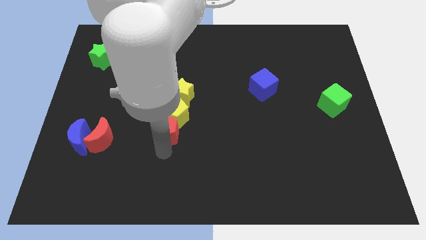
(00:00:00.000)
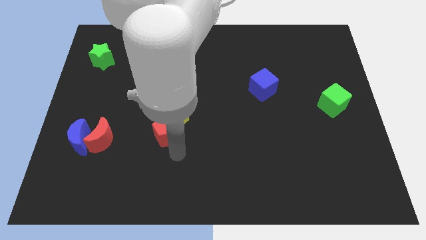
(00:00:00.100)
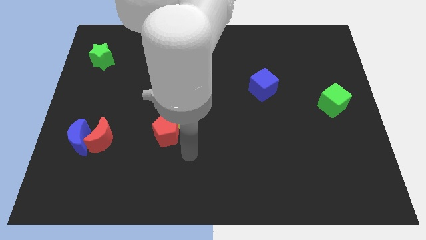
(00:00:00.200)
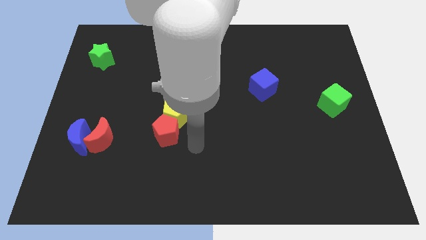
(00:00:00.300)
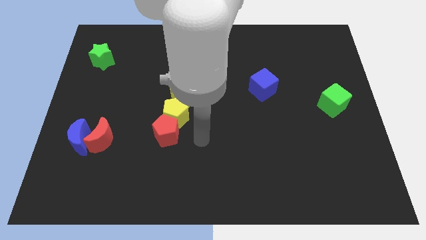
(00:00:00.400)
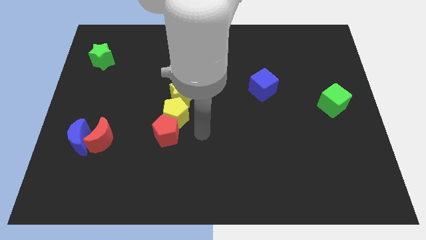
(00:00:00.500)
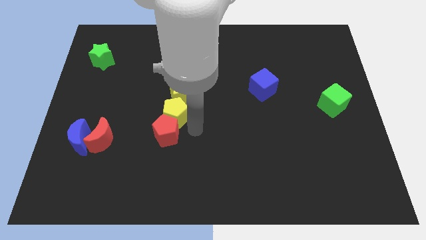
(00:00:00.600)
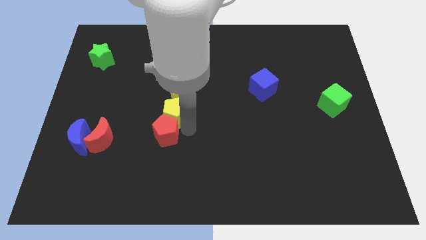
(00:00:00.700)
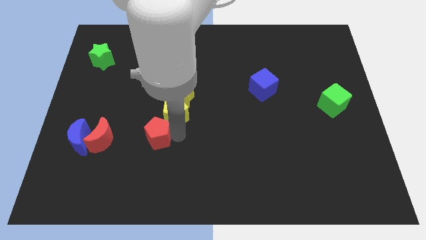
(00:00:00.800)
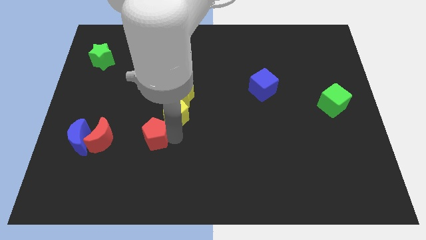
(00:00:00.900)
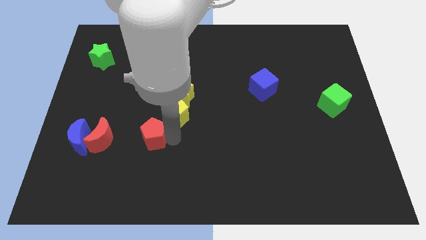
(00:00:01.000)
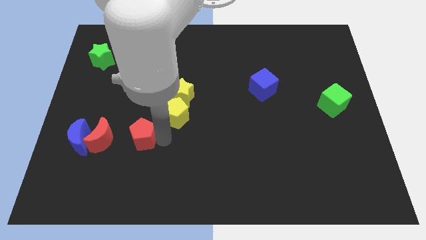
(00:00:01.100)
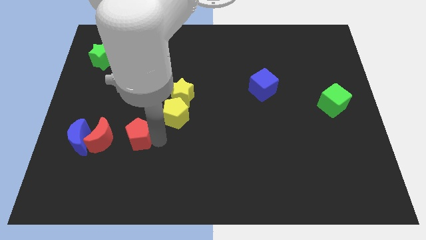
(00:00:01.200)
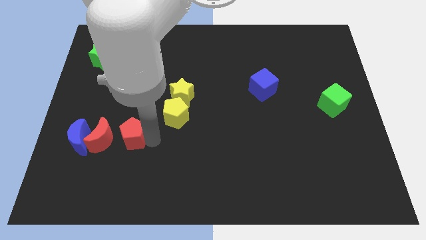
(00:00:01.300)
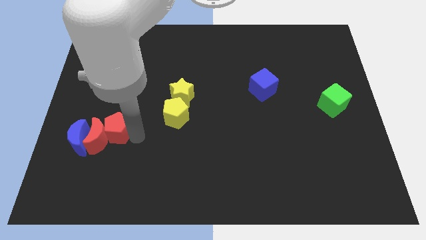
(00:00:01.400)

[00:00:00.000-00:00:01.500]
push the red pentagon towards the right side of red moon

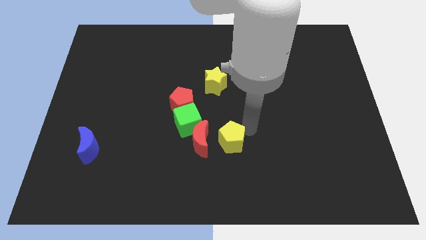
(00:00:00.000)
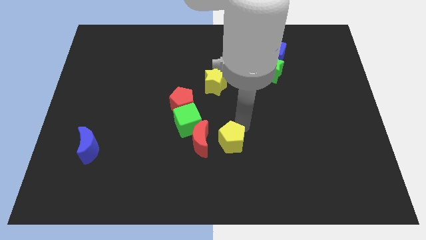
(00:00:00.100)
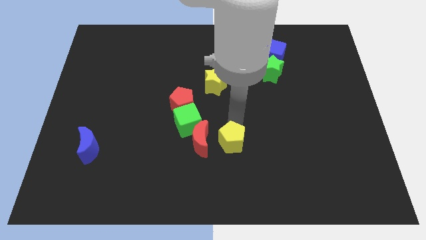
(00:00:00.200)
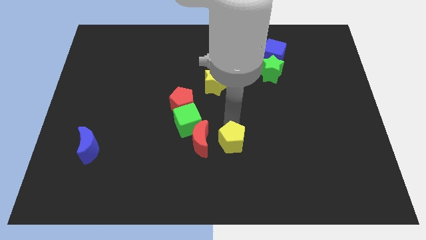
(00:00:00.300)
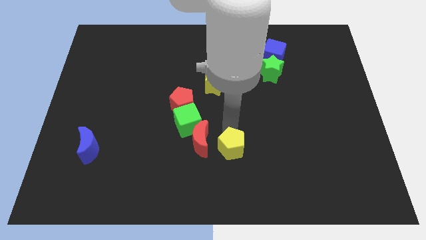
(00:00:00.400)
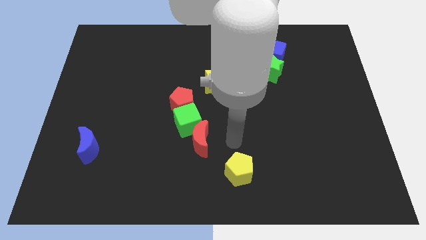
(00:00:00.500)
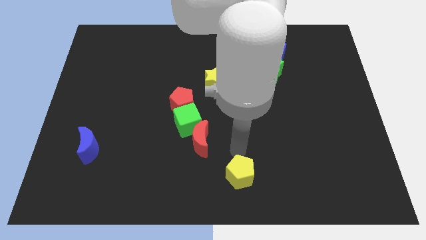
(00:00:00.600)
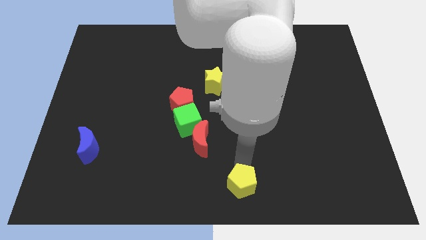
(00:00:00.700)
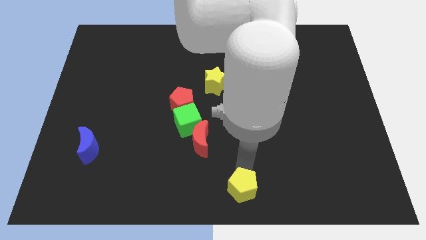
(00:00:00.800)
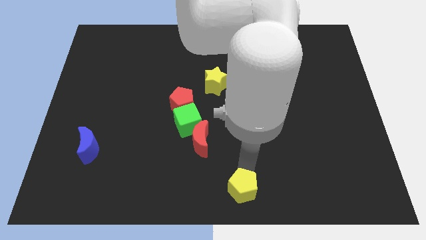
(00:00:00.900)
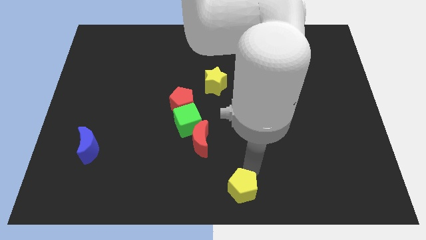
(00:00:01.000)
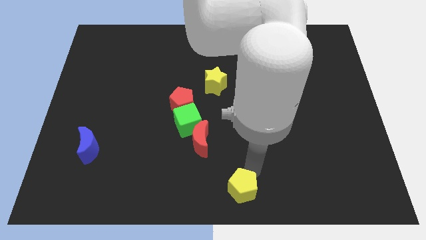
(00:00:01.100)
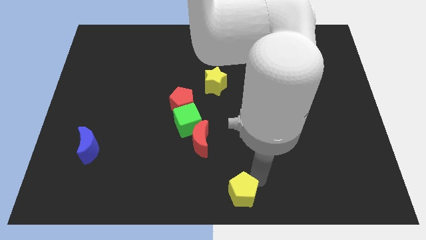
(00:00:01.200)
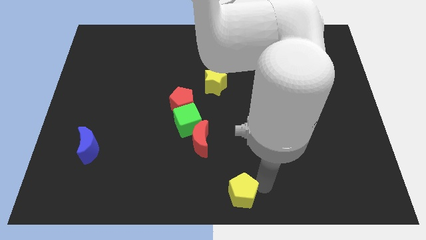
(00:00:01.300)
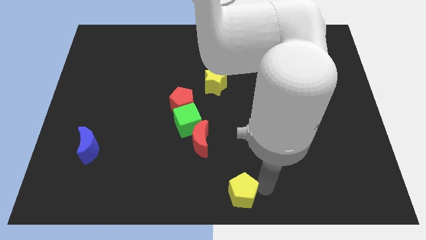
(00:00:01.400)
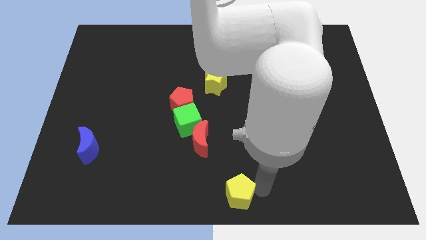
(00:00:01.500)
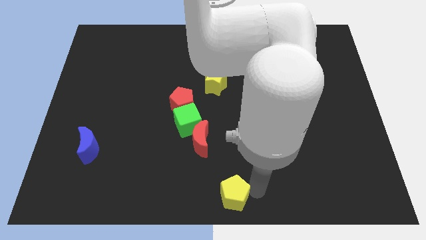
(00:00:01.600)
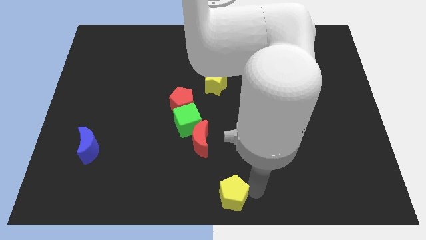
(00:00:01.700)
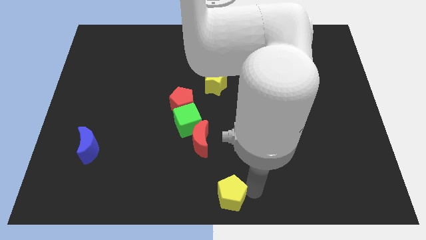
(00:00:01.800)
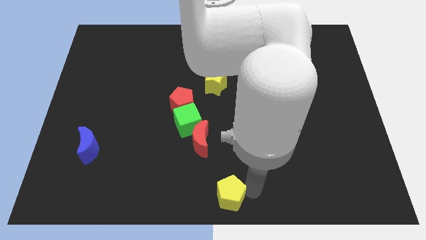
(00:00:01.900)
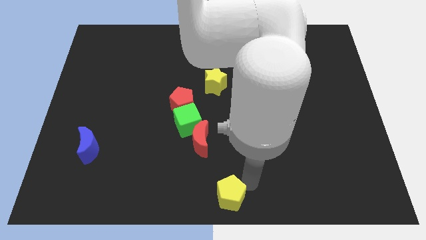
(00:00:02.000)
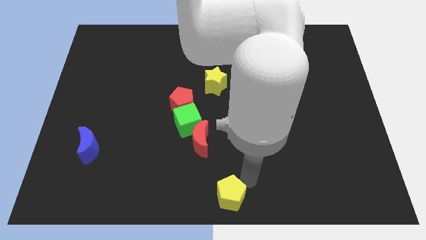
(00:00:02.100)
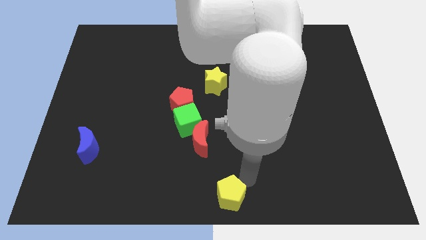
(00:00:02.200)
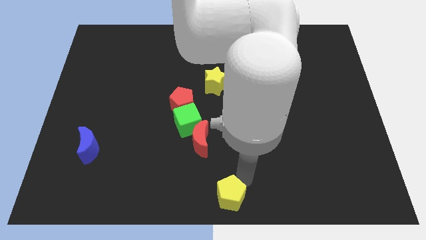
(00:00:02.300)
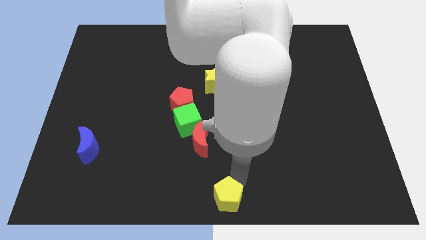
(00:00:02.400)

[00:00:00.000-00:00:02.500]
place yellow pentagon in to bottom center

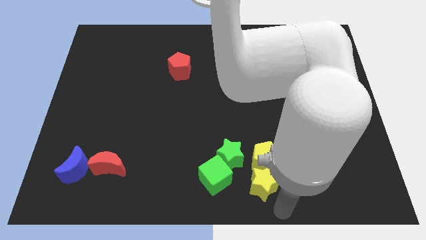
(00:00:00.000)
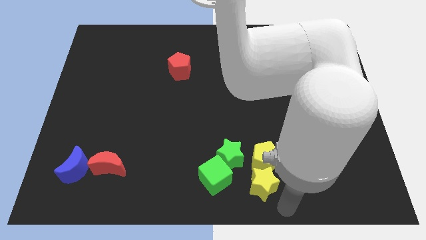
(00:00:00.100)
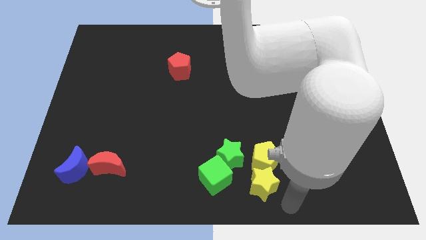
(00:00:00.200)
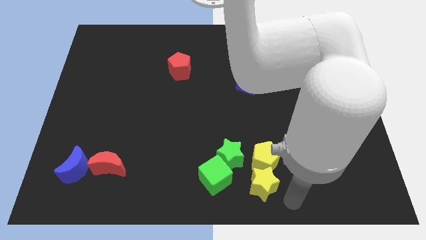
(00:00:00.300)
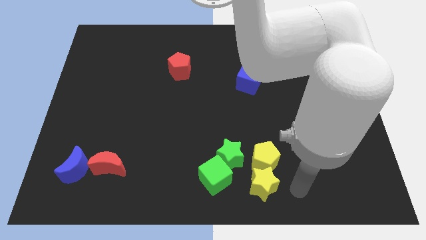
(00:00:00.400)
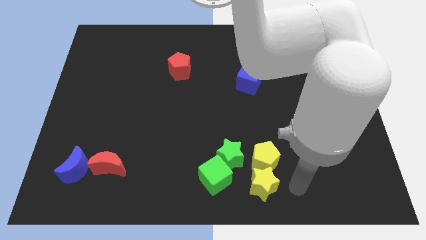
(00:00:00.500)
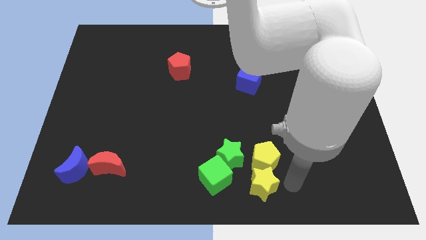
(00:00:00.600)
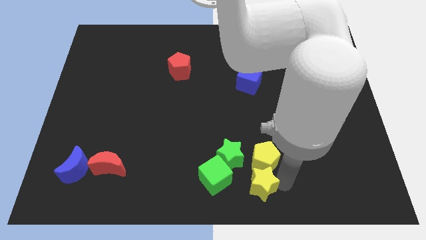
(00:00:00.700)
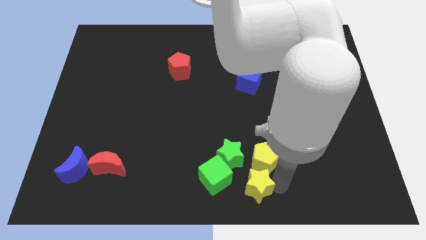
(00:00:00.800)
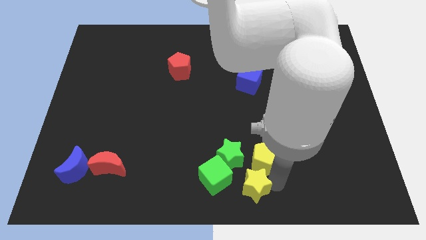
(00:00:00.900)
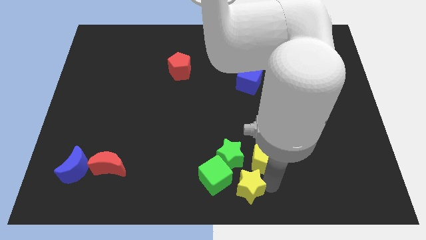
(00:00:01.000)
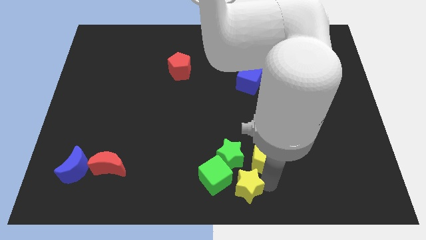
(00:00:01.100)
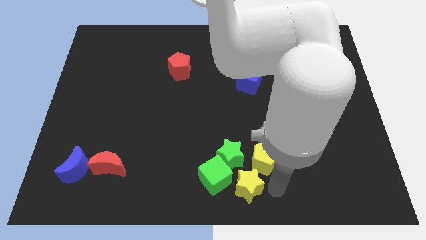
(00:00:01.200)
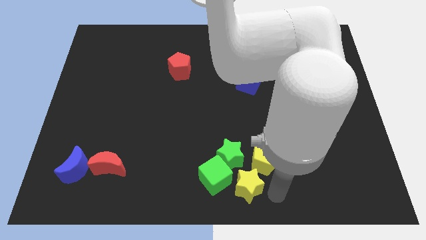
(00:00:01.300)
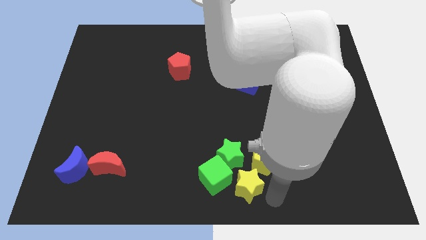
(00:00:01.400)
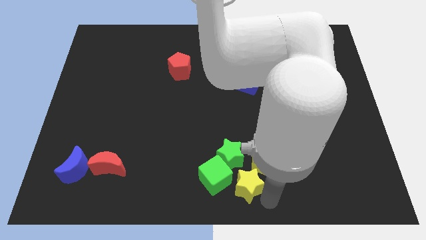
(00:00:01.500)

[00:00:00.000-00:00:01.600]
push the yellow star to the right of the green cube

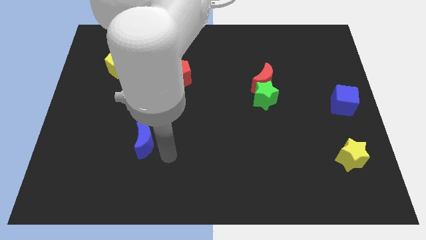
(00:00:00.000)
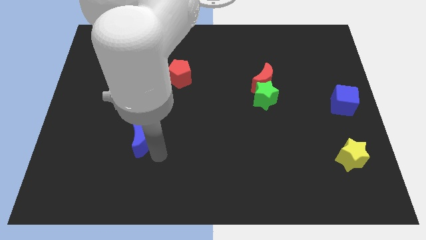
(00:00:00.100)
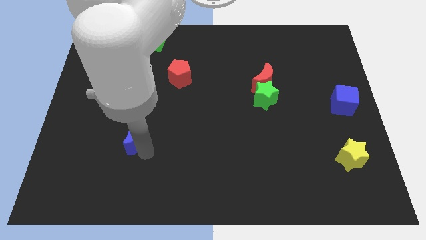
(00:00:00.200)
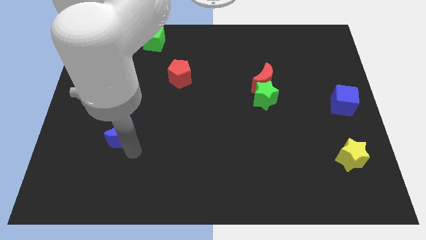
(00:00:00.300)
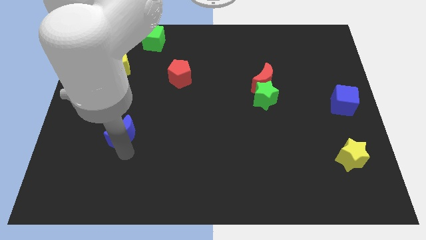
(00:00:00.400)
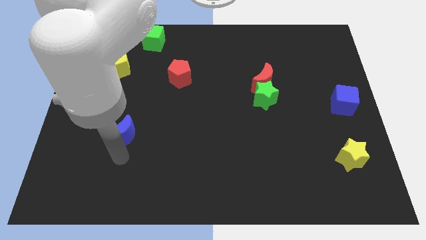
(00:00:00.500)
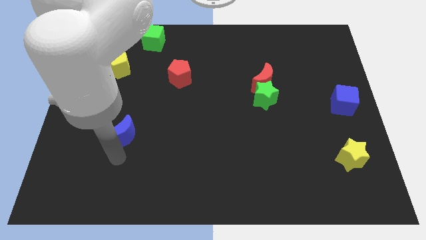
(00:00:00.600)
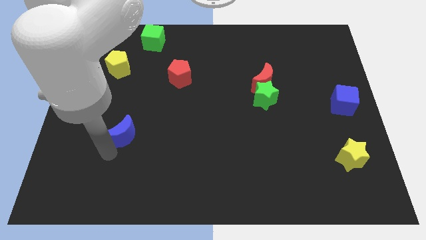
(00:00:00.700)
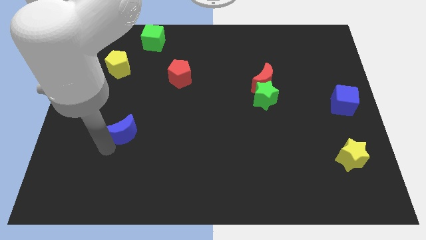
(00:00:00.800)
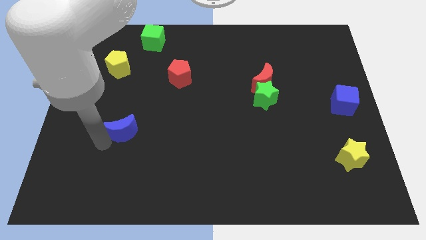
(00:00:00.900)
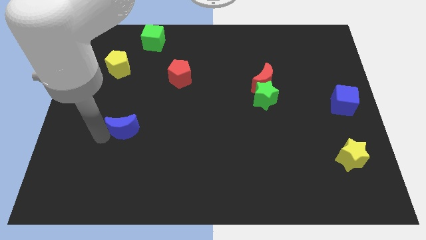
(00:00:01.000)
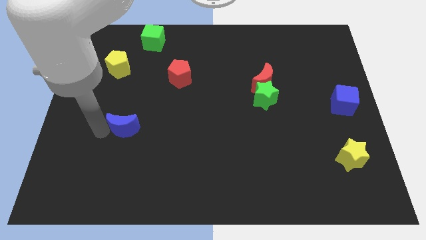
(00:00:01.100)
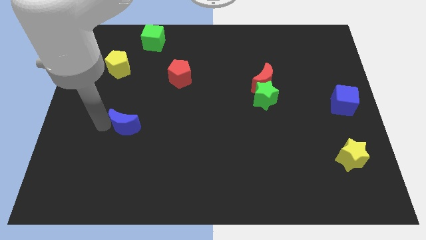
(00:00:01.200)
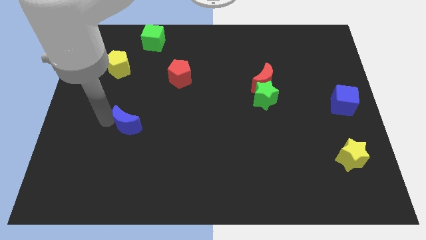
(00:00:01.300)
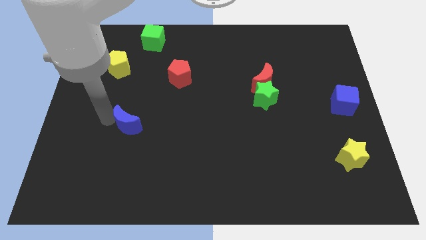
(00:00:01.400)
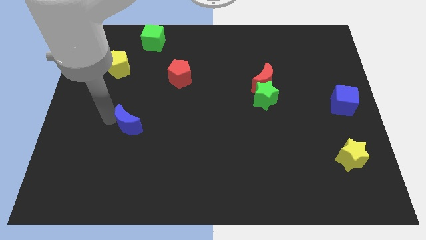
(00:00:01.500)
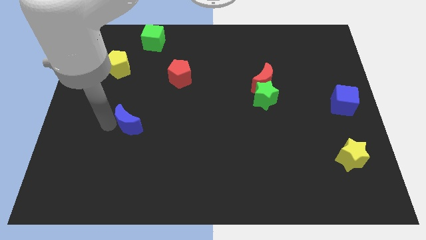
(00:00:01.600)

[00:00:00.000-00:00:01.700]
slide the blue semi circle towards top

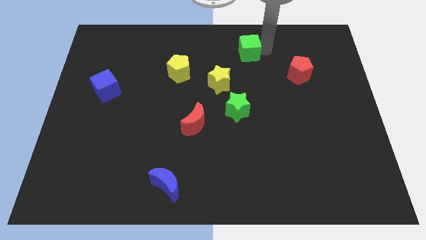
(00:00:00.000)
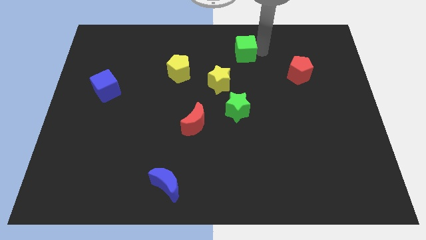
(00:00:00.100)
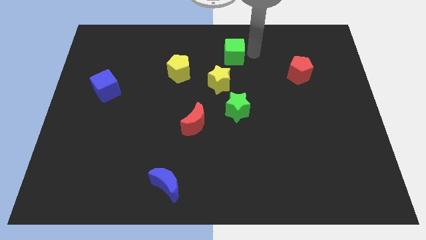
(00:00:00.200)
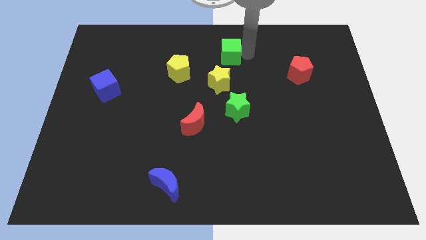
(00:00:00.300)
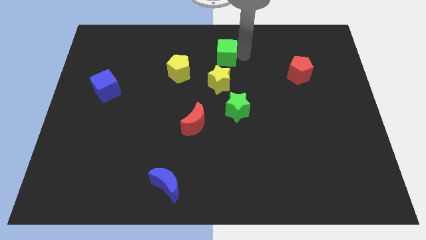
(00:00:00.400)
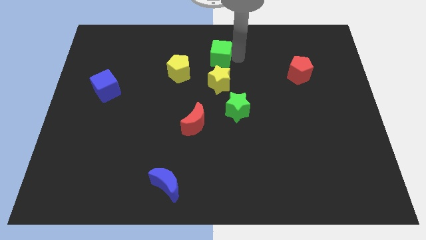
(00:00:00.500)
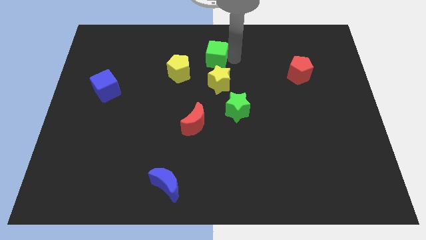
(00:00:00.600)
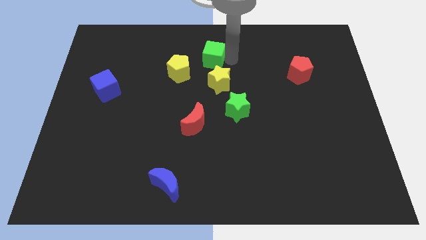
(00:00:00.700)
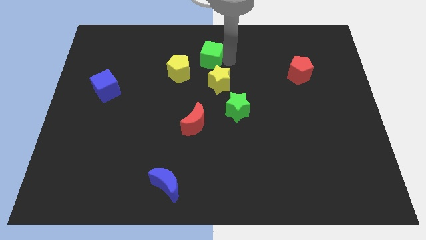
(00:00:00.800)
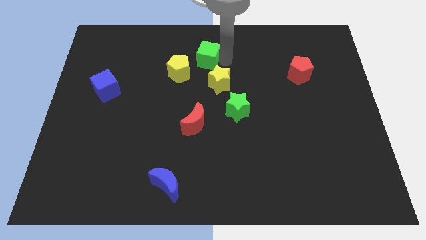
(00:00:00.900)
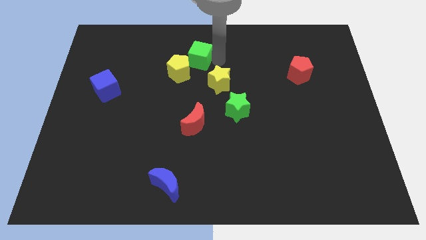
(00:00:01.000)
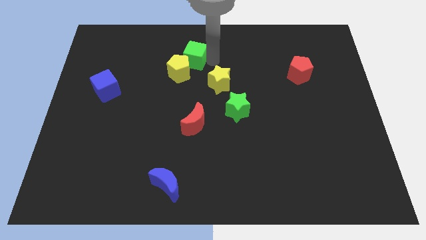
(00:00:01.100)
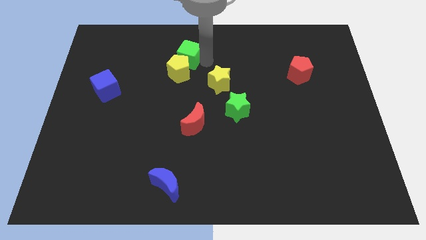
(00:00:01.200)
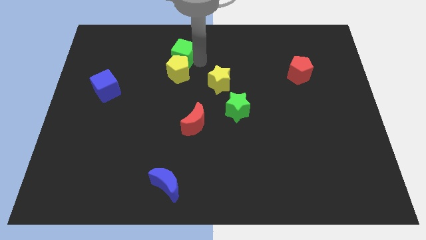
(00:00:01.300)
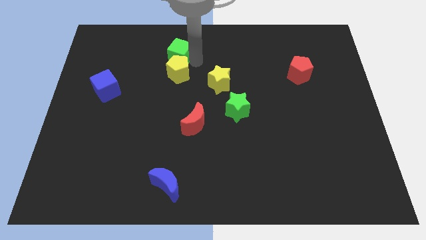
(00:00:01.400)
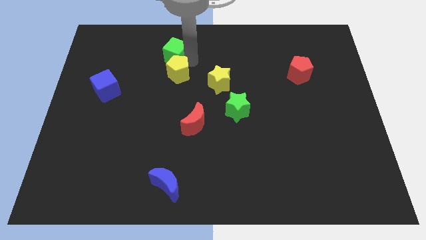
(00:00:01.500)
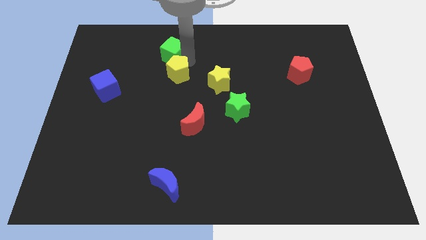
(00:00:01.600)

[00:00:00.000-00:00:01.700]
push the green cube into the yellow pentagon
